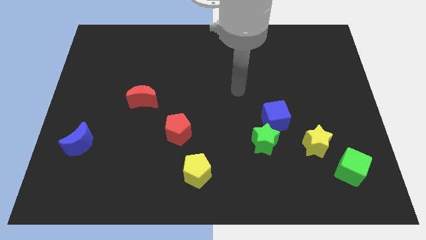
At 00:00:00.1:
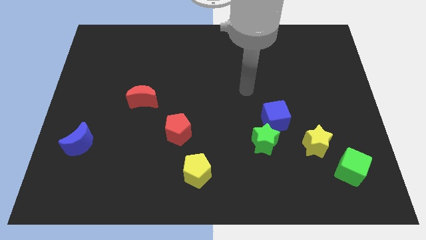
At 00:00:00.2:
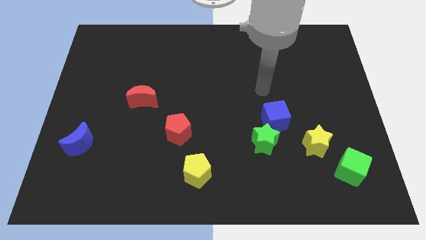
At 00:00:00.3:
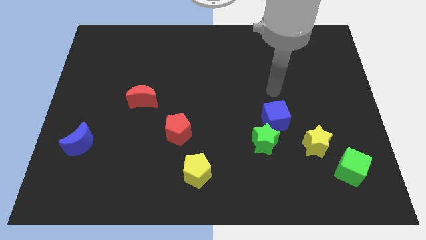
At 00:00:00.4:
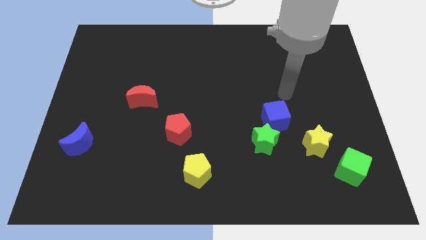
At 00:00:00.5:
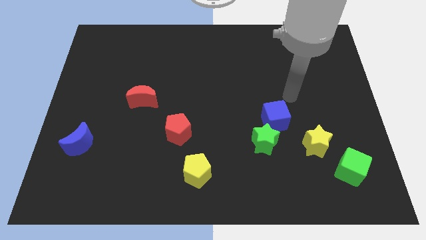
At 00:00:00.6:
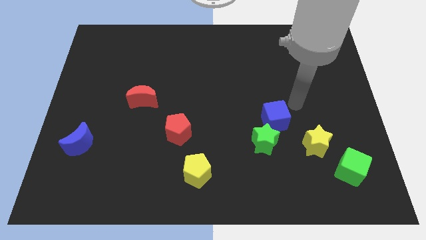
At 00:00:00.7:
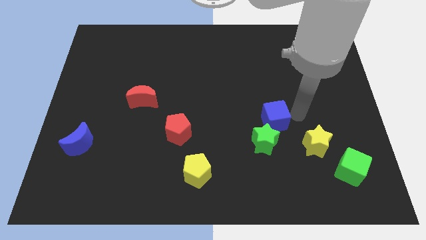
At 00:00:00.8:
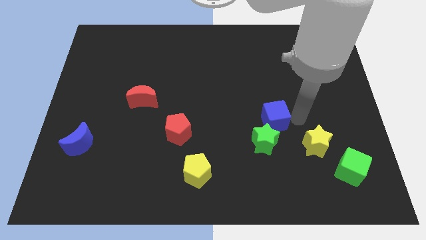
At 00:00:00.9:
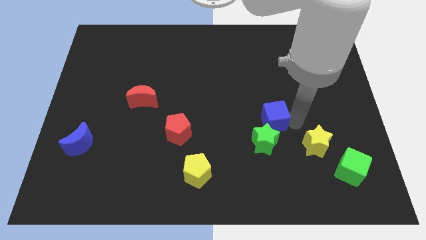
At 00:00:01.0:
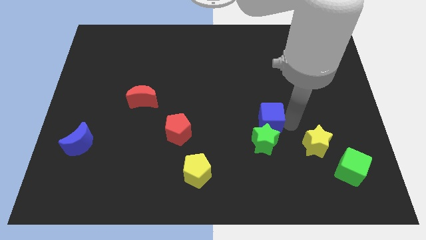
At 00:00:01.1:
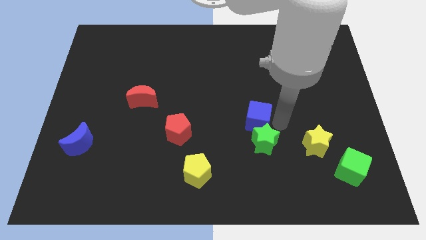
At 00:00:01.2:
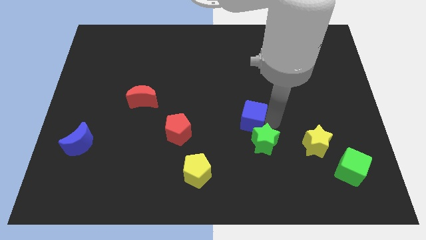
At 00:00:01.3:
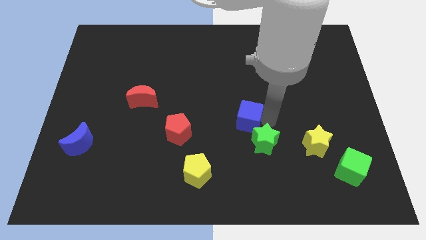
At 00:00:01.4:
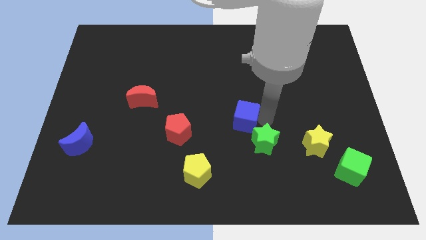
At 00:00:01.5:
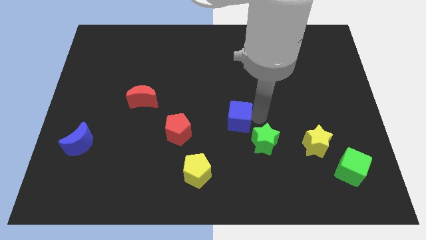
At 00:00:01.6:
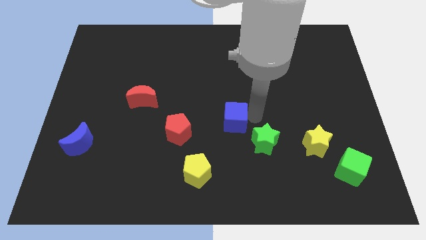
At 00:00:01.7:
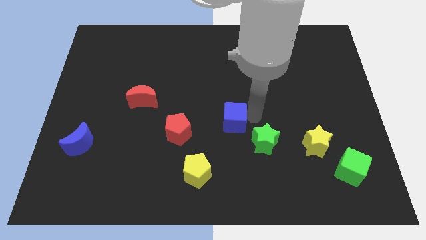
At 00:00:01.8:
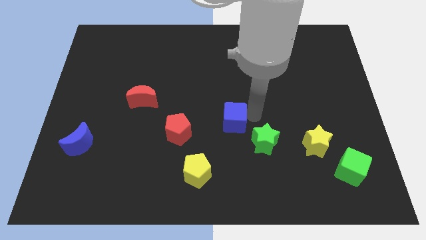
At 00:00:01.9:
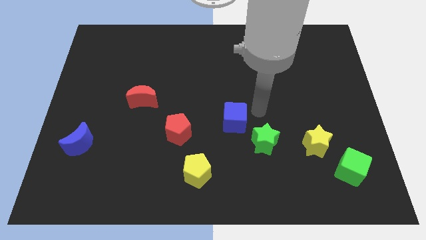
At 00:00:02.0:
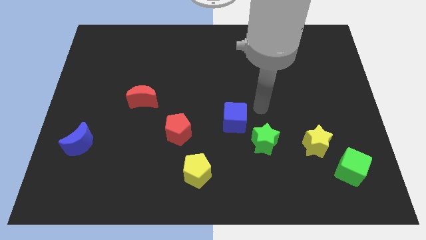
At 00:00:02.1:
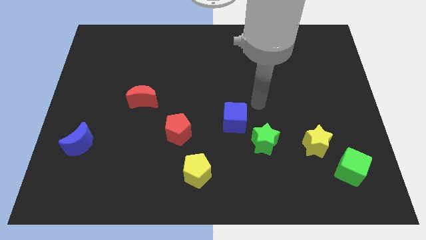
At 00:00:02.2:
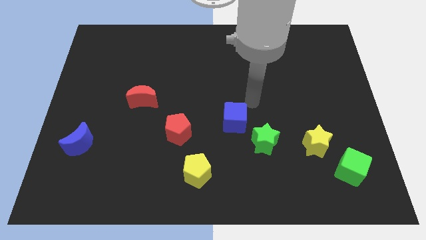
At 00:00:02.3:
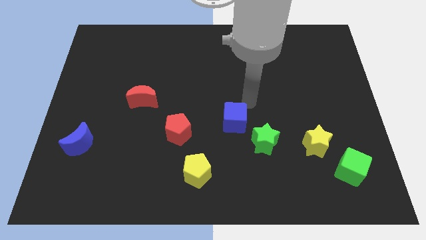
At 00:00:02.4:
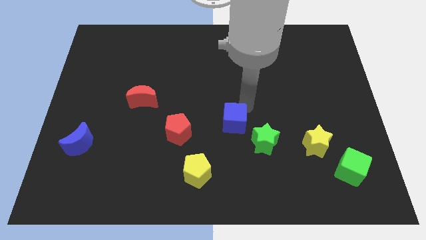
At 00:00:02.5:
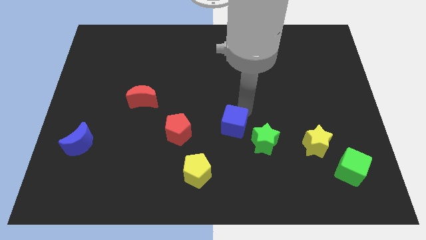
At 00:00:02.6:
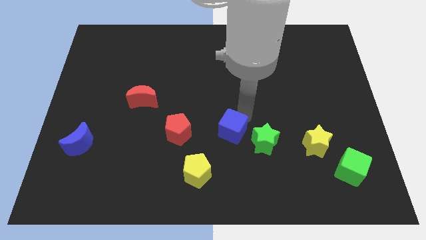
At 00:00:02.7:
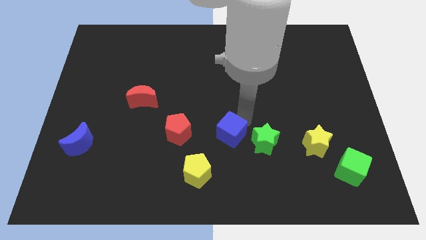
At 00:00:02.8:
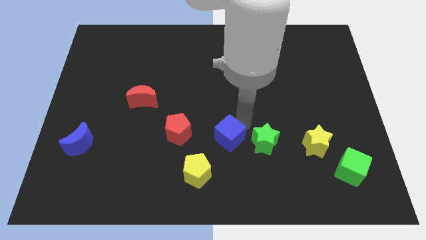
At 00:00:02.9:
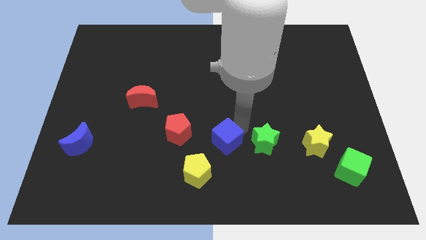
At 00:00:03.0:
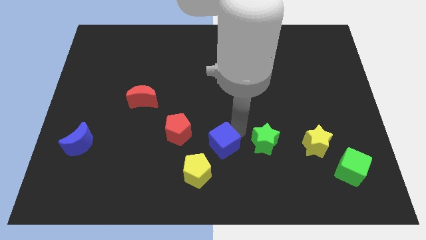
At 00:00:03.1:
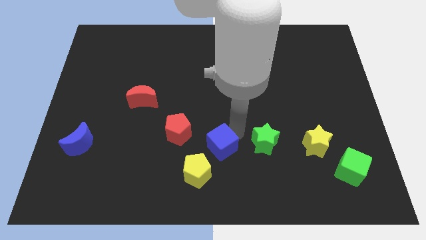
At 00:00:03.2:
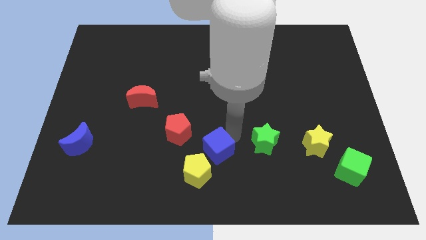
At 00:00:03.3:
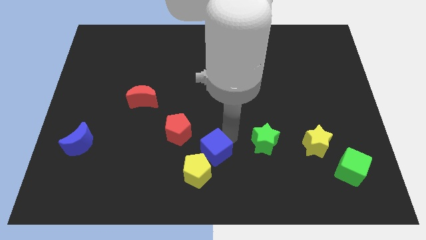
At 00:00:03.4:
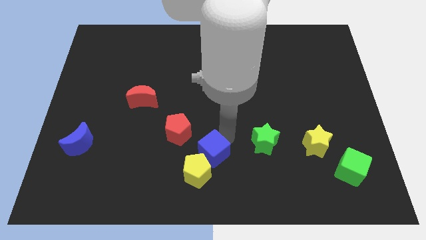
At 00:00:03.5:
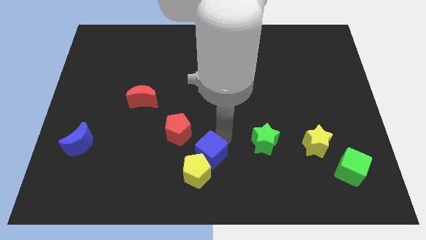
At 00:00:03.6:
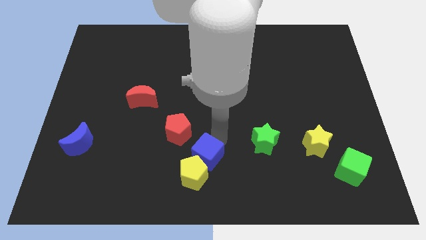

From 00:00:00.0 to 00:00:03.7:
push the blue cube close to the yellow pentagon

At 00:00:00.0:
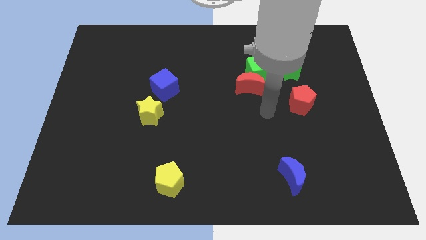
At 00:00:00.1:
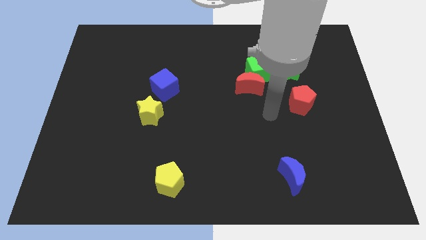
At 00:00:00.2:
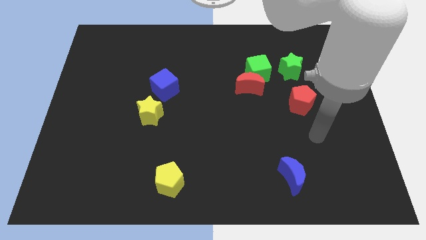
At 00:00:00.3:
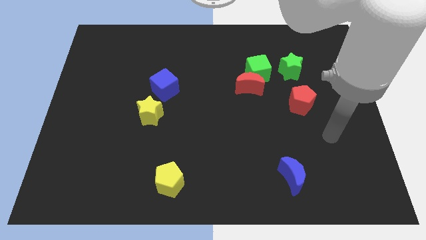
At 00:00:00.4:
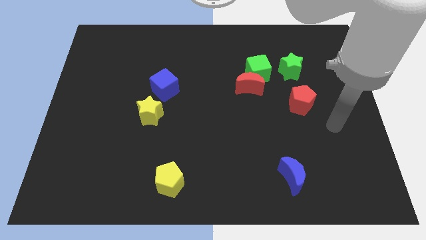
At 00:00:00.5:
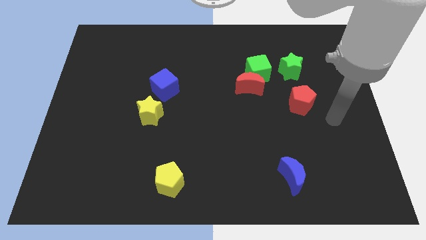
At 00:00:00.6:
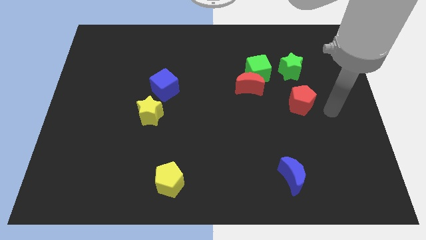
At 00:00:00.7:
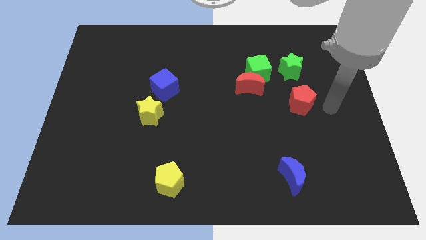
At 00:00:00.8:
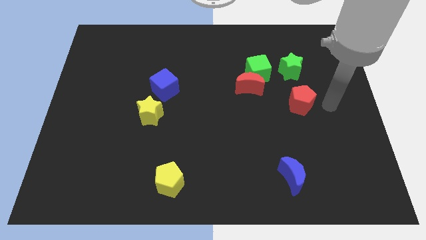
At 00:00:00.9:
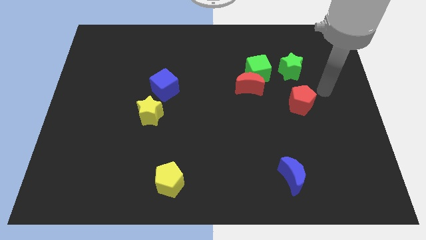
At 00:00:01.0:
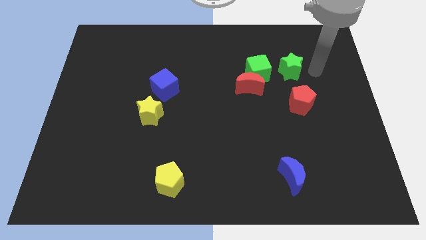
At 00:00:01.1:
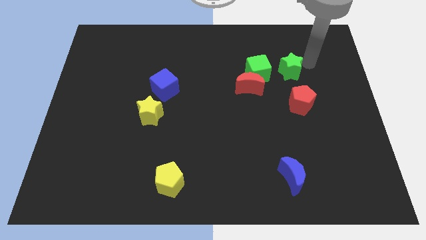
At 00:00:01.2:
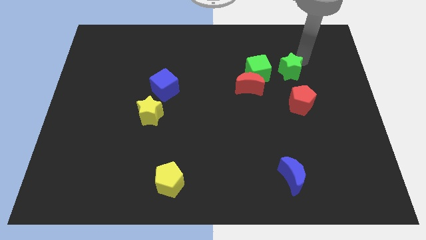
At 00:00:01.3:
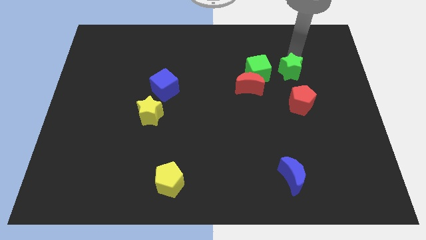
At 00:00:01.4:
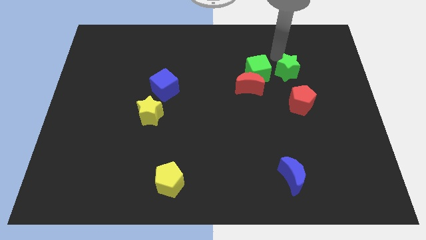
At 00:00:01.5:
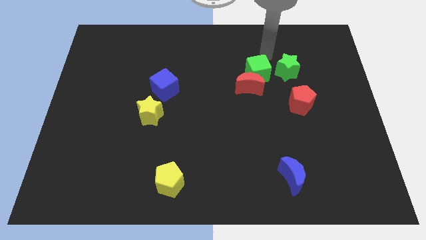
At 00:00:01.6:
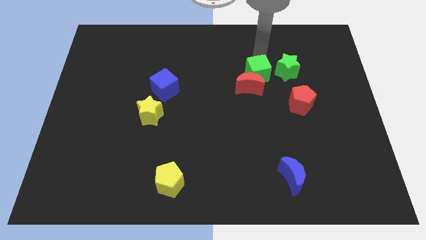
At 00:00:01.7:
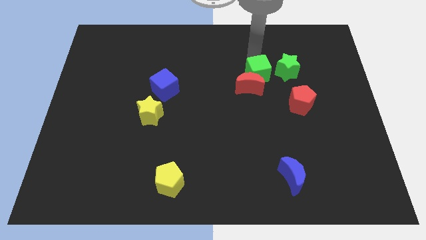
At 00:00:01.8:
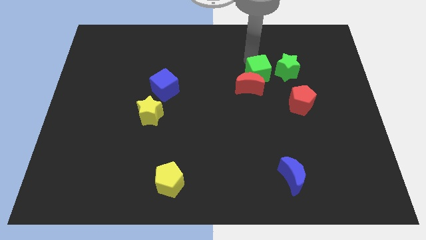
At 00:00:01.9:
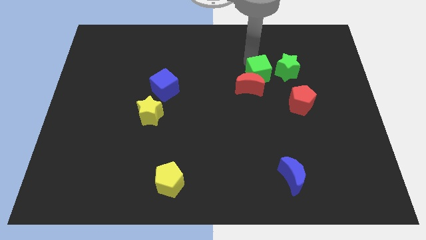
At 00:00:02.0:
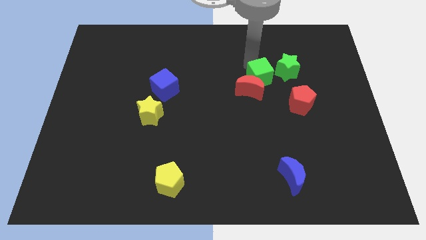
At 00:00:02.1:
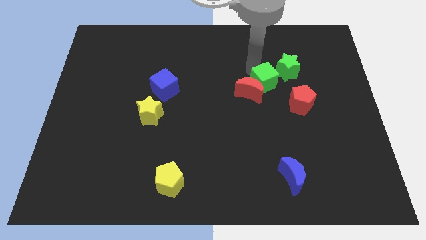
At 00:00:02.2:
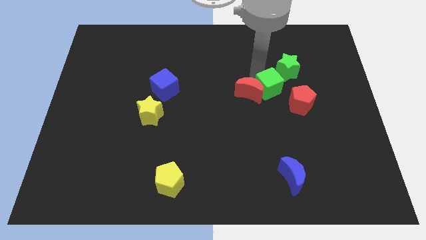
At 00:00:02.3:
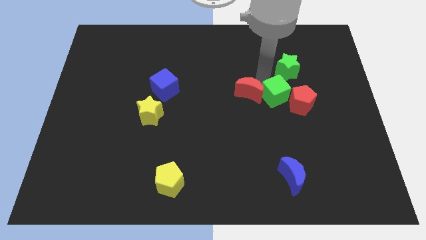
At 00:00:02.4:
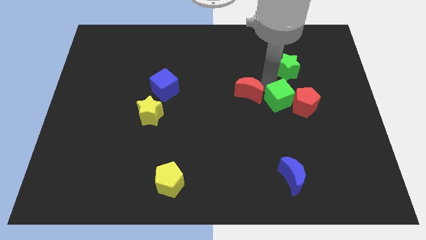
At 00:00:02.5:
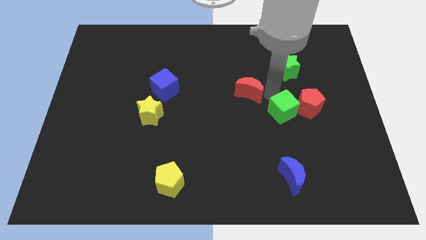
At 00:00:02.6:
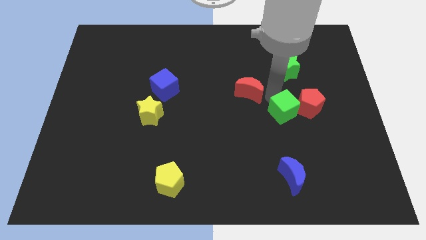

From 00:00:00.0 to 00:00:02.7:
push the green cube next to the red pentagon

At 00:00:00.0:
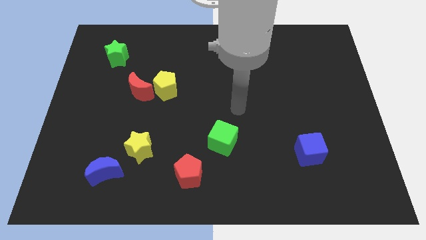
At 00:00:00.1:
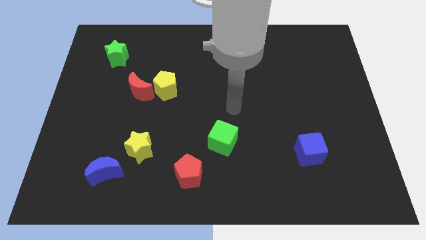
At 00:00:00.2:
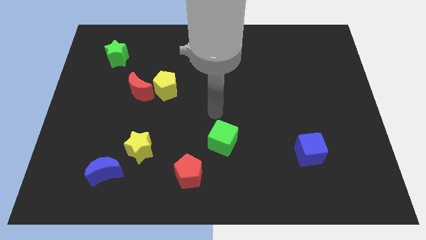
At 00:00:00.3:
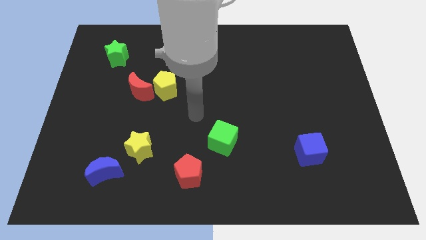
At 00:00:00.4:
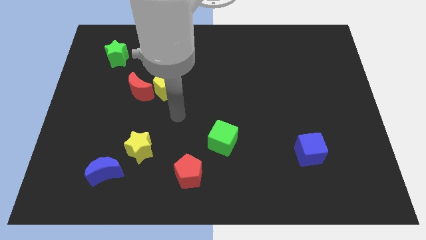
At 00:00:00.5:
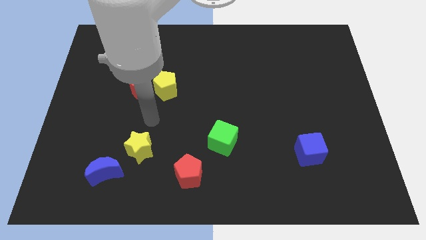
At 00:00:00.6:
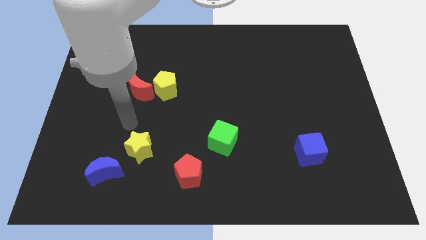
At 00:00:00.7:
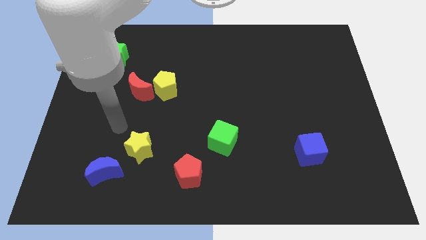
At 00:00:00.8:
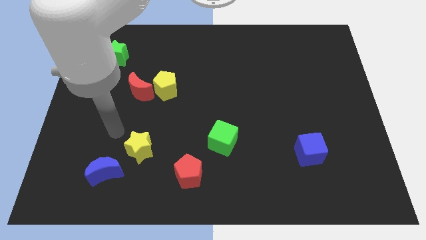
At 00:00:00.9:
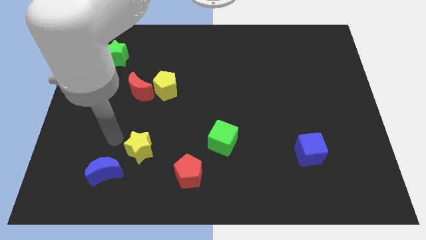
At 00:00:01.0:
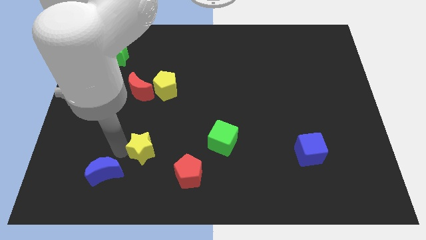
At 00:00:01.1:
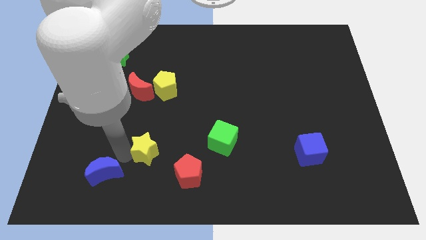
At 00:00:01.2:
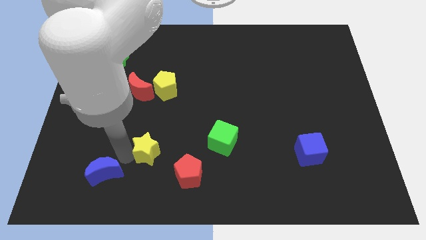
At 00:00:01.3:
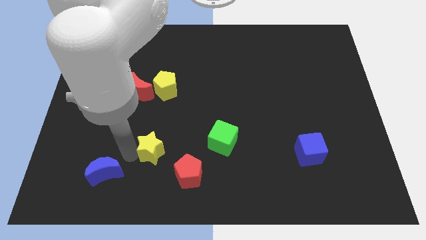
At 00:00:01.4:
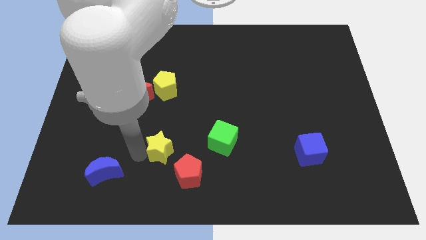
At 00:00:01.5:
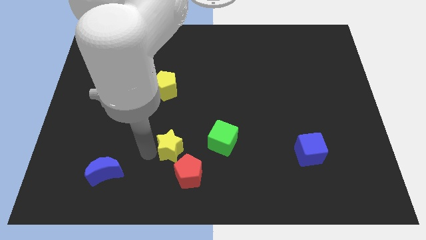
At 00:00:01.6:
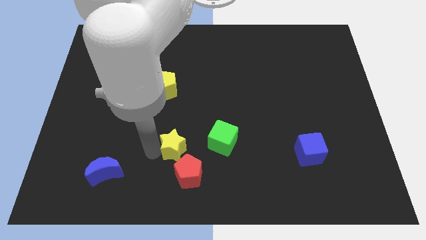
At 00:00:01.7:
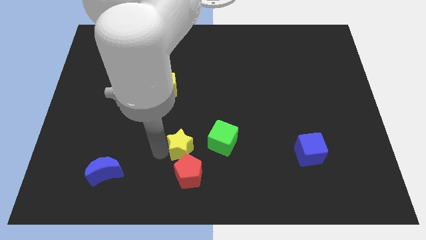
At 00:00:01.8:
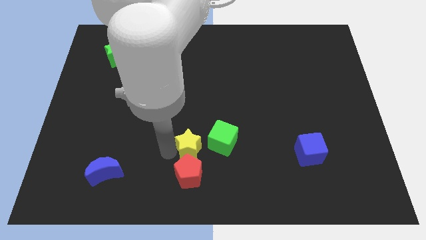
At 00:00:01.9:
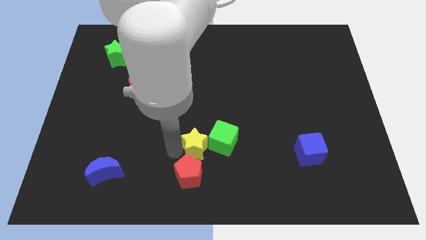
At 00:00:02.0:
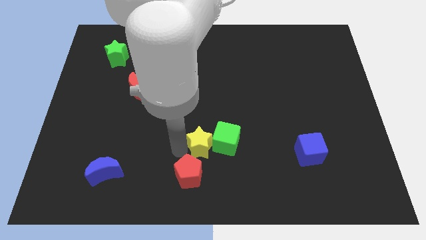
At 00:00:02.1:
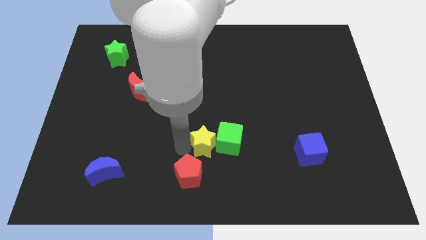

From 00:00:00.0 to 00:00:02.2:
push the yellow star towards the green cube
